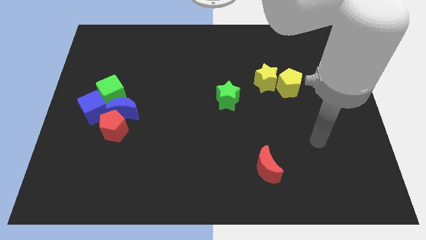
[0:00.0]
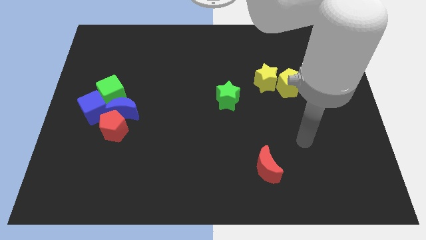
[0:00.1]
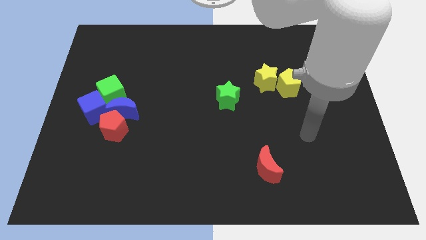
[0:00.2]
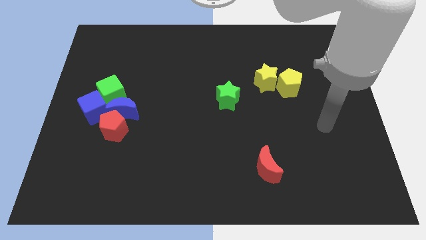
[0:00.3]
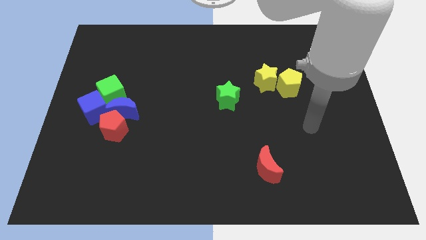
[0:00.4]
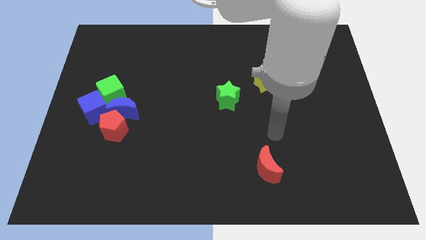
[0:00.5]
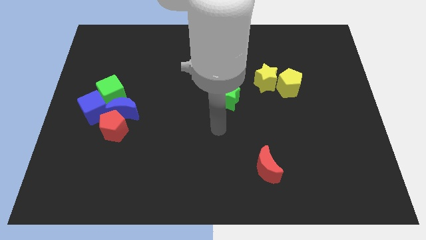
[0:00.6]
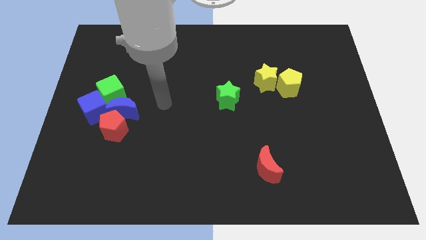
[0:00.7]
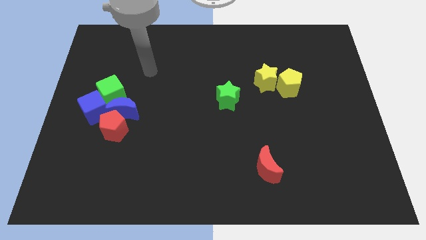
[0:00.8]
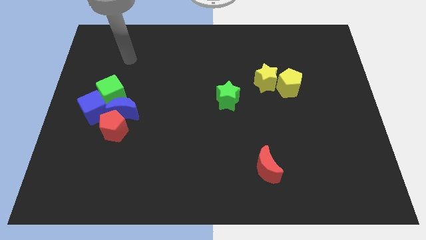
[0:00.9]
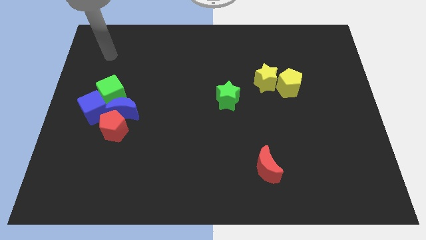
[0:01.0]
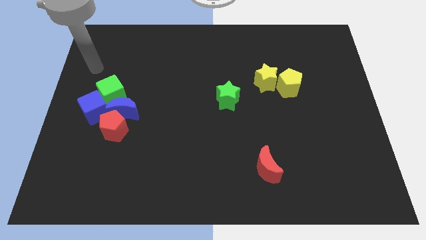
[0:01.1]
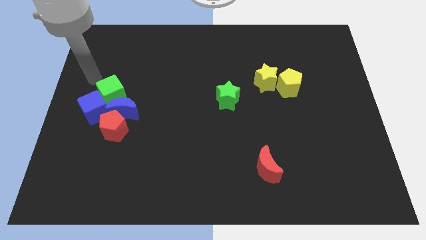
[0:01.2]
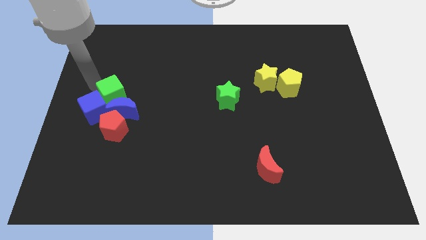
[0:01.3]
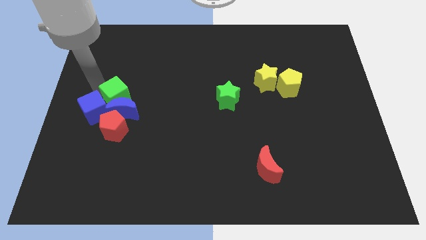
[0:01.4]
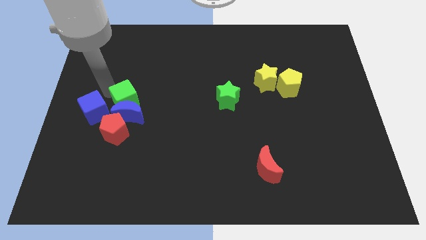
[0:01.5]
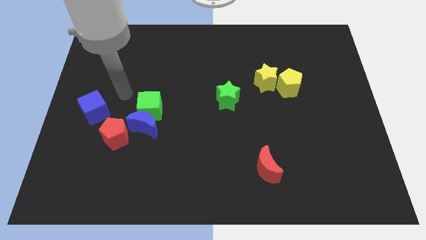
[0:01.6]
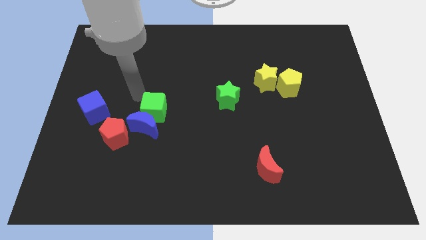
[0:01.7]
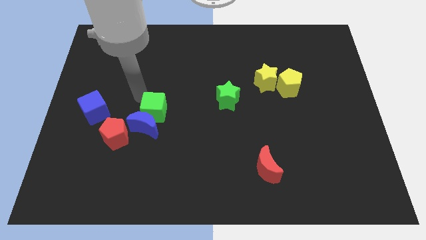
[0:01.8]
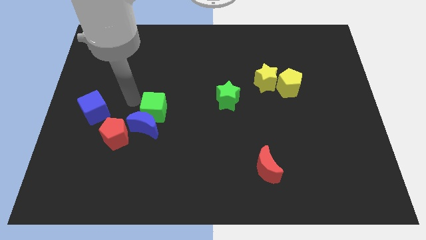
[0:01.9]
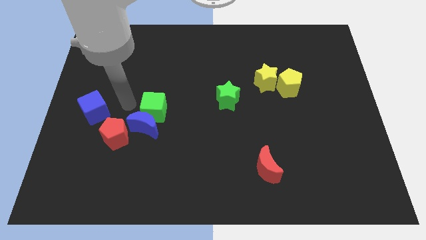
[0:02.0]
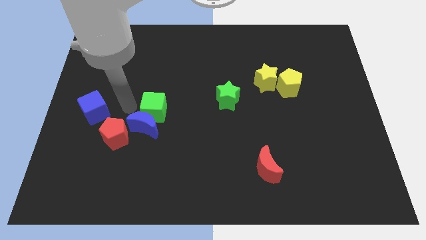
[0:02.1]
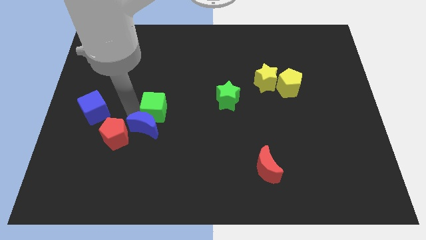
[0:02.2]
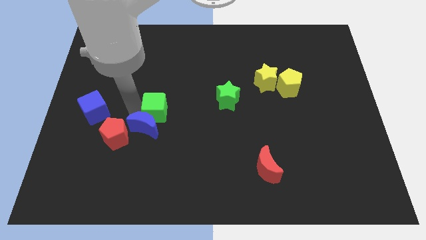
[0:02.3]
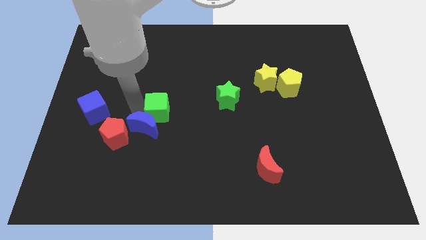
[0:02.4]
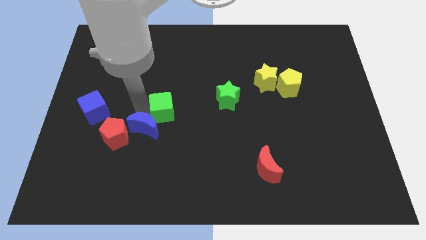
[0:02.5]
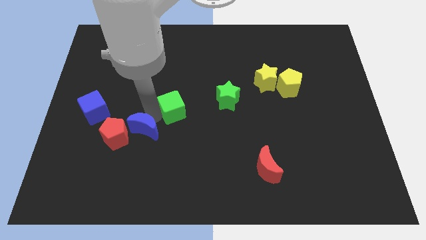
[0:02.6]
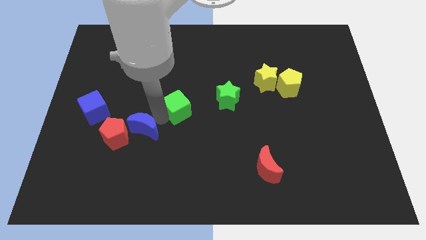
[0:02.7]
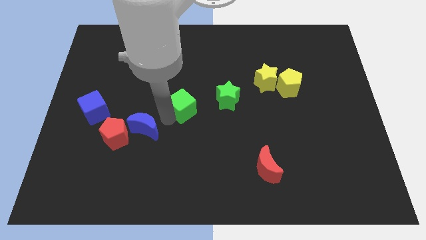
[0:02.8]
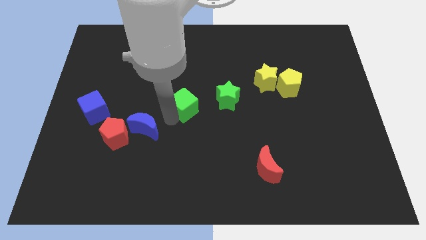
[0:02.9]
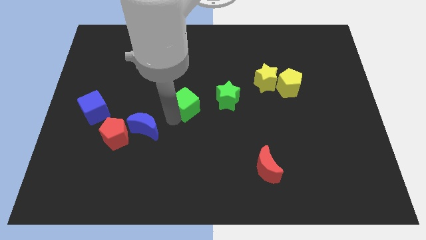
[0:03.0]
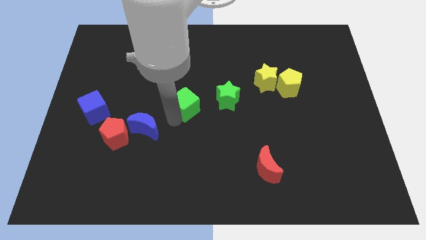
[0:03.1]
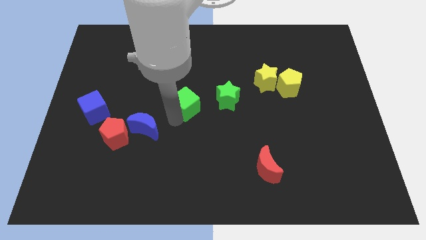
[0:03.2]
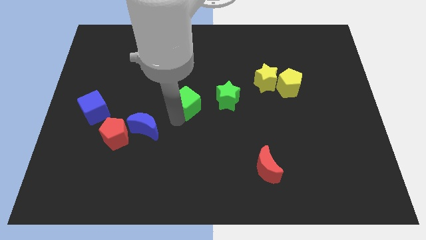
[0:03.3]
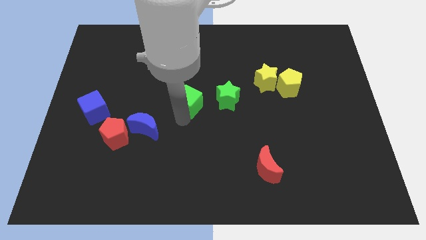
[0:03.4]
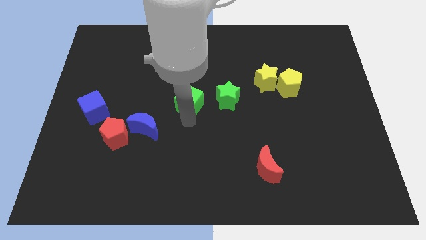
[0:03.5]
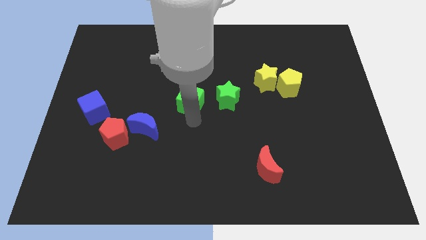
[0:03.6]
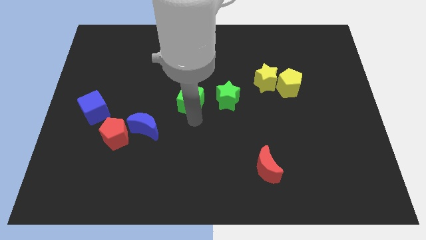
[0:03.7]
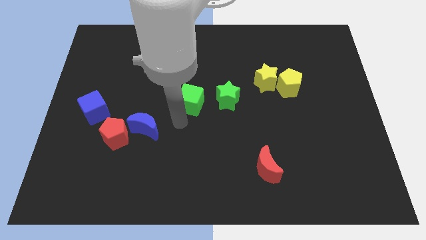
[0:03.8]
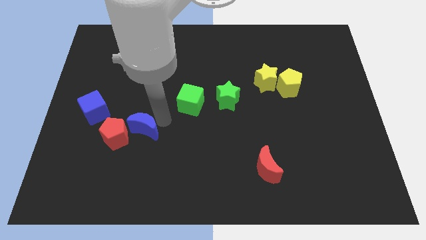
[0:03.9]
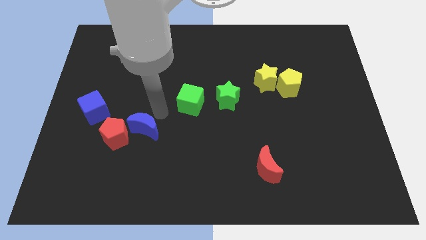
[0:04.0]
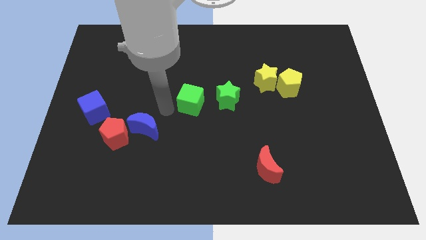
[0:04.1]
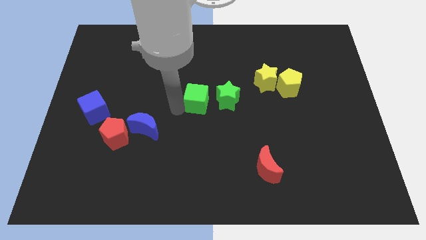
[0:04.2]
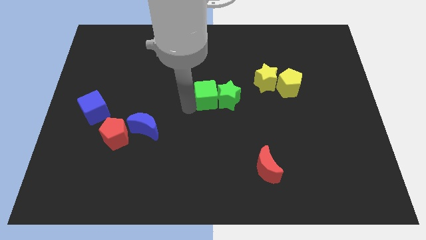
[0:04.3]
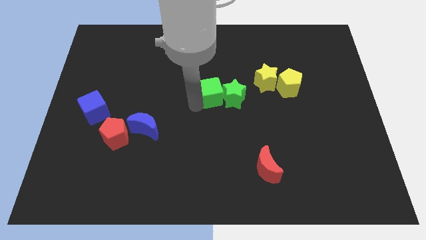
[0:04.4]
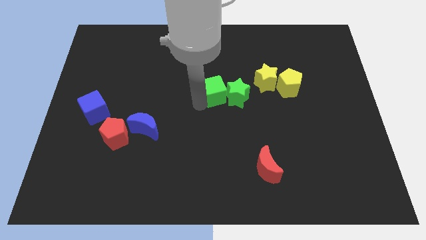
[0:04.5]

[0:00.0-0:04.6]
push the green cube close to the green star

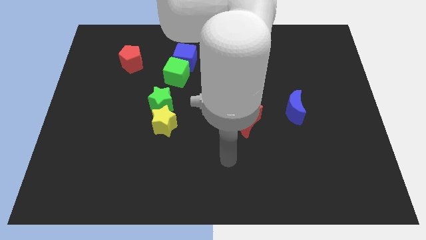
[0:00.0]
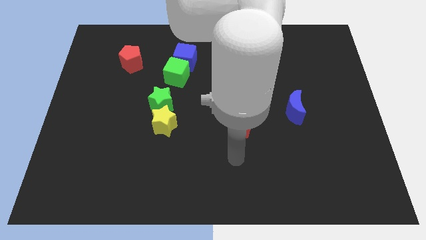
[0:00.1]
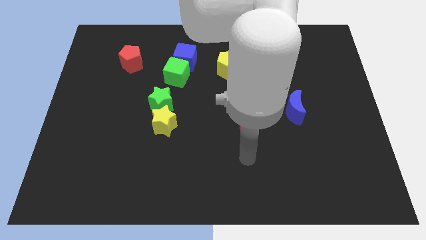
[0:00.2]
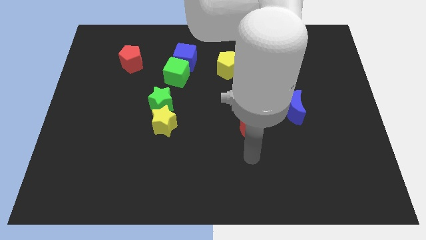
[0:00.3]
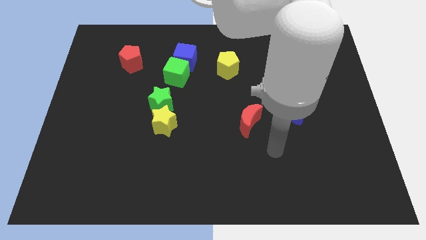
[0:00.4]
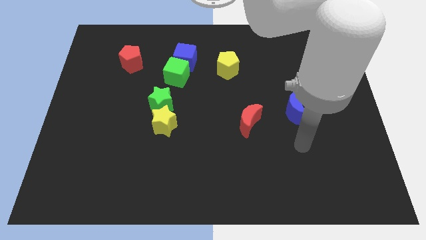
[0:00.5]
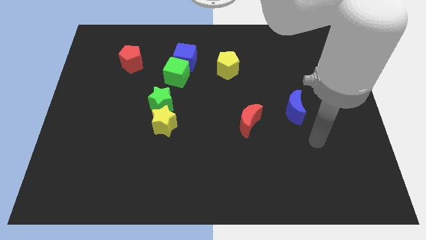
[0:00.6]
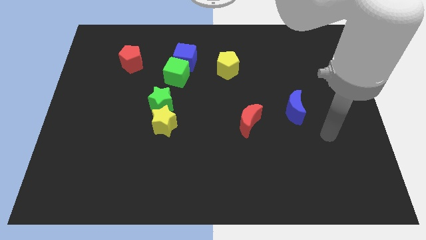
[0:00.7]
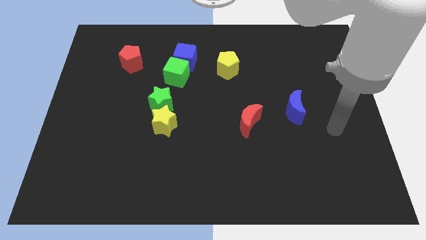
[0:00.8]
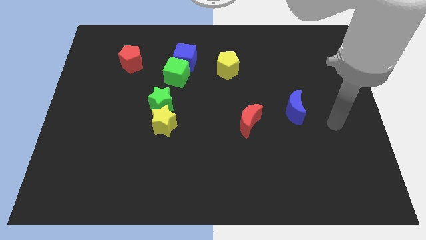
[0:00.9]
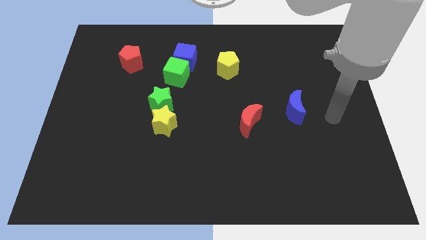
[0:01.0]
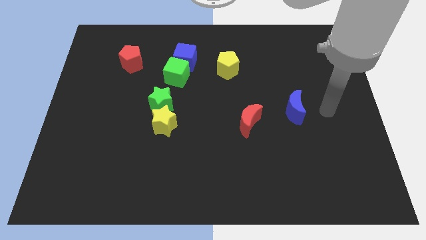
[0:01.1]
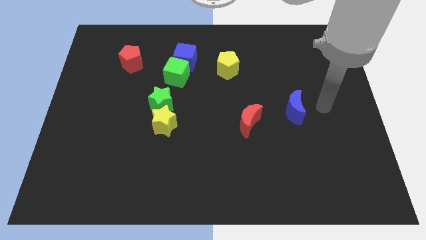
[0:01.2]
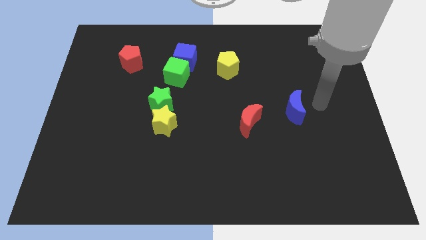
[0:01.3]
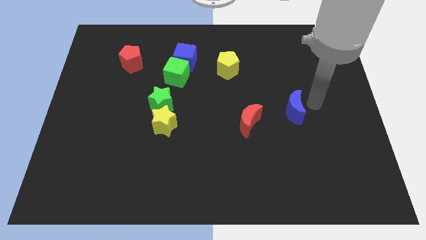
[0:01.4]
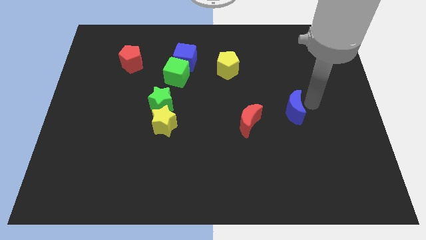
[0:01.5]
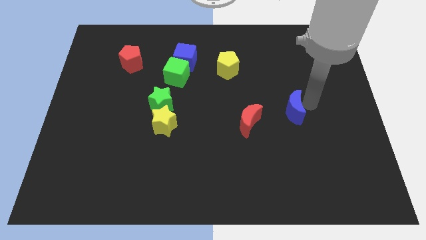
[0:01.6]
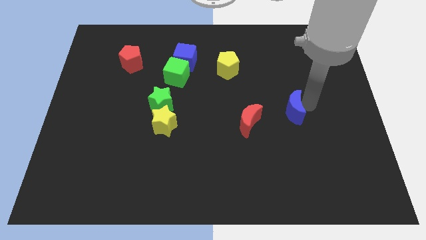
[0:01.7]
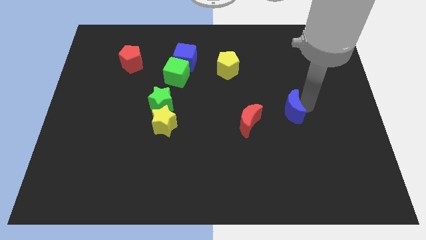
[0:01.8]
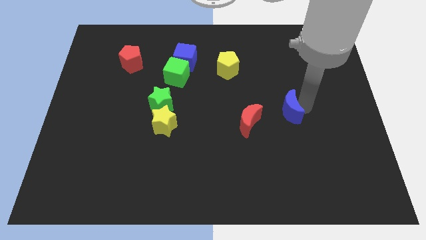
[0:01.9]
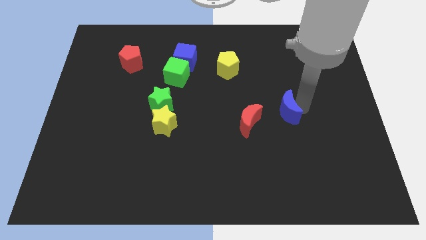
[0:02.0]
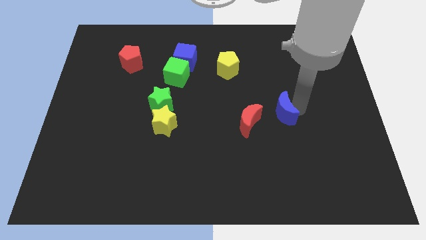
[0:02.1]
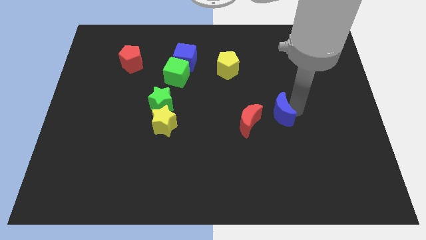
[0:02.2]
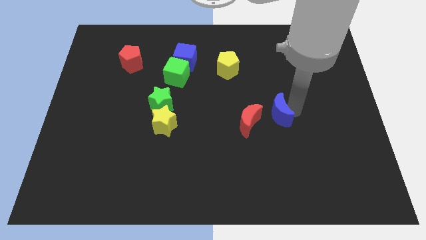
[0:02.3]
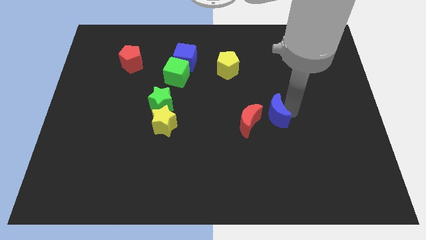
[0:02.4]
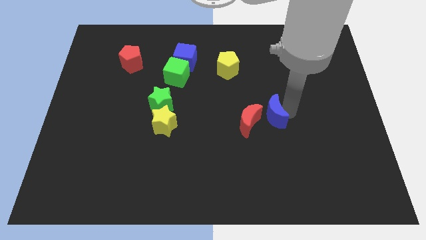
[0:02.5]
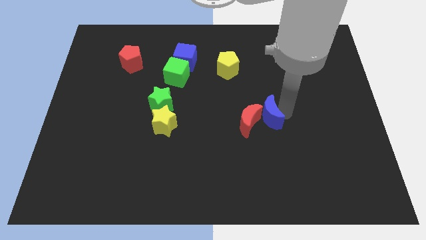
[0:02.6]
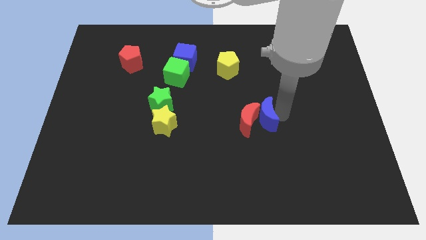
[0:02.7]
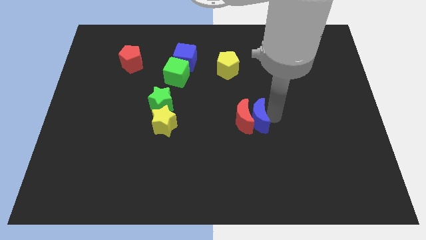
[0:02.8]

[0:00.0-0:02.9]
put the blue moon close to the red moon

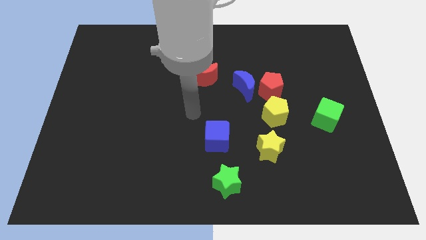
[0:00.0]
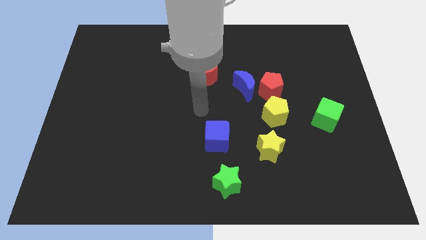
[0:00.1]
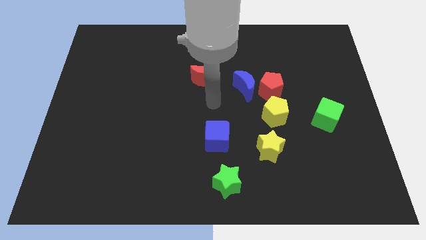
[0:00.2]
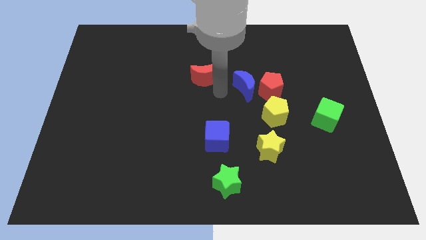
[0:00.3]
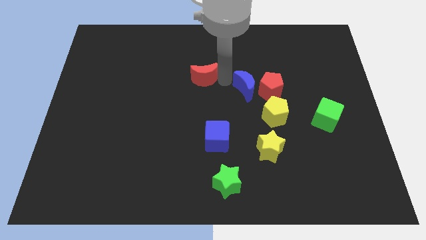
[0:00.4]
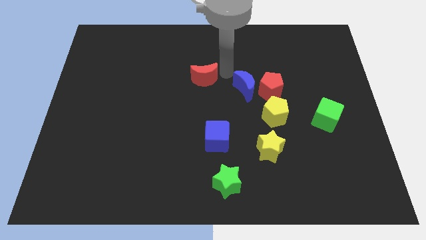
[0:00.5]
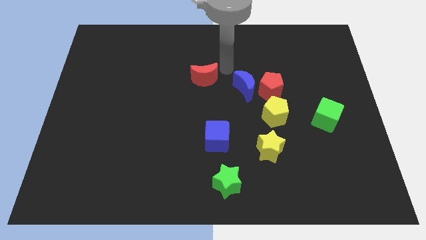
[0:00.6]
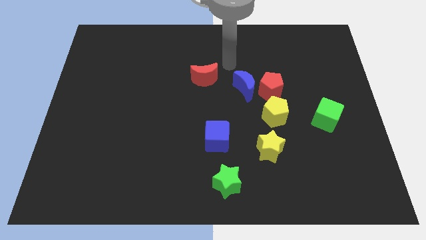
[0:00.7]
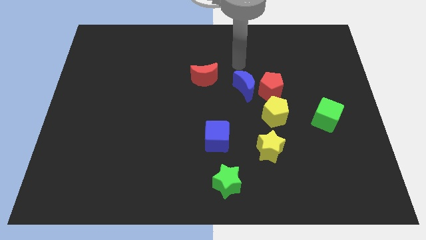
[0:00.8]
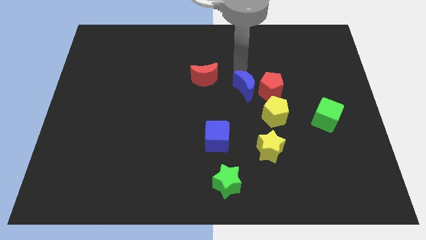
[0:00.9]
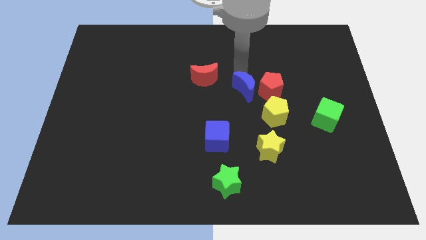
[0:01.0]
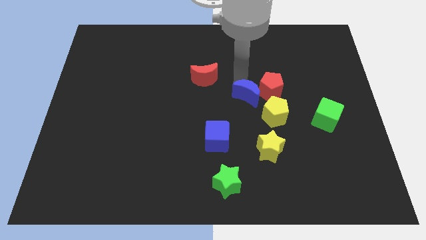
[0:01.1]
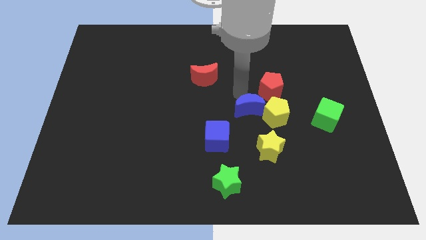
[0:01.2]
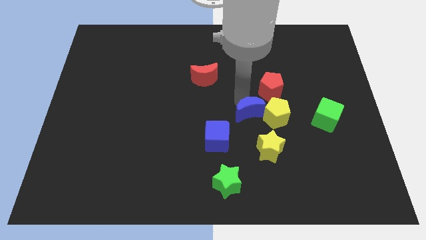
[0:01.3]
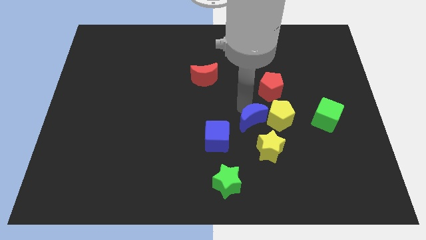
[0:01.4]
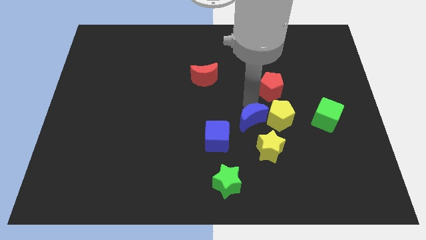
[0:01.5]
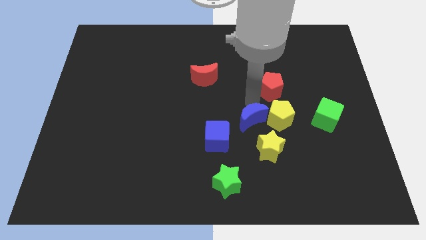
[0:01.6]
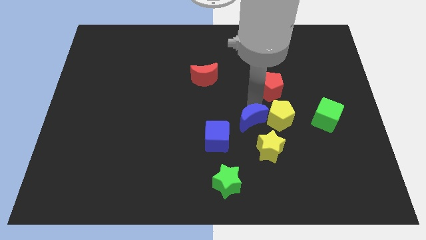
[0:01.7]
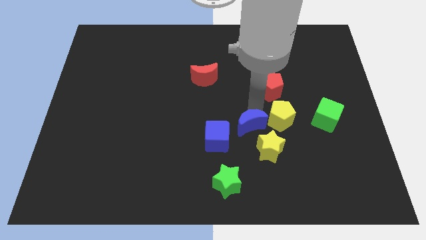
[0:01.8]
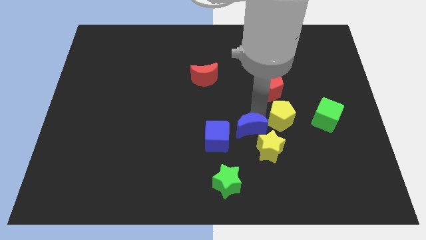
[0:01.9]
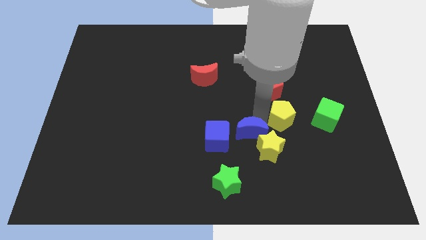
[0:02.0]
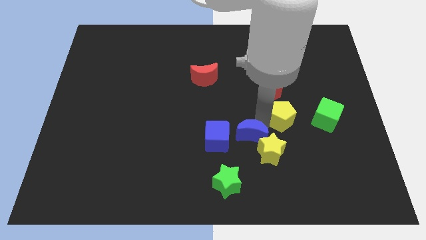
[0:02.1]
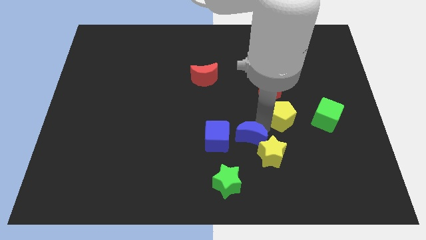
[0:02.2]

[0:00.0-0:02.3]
slide the blue moon towards the yellow star
